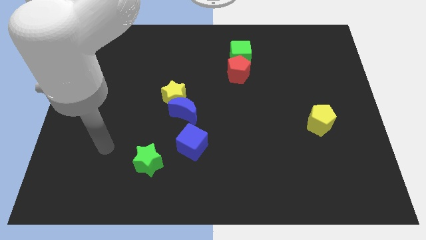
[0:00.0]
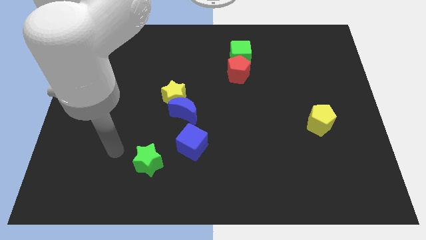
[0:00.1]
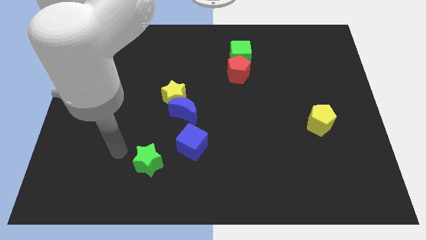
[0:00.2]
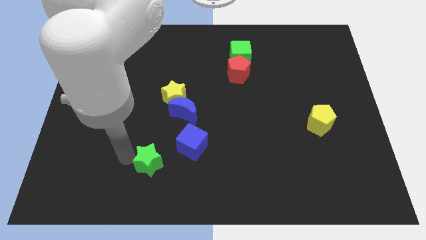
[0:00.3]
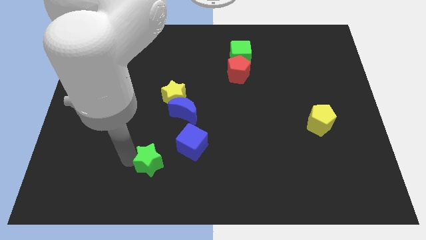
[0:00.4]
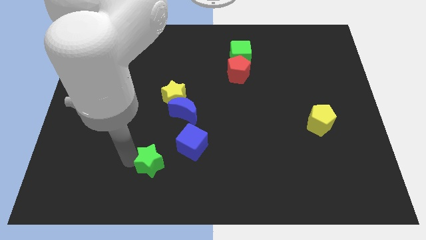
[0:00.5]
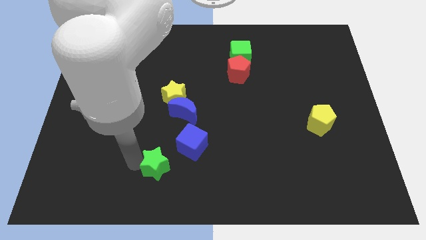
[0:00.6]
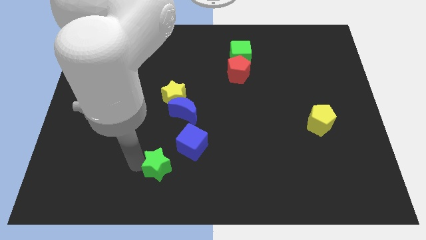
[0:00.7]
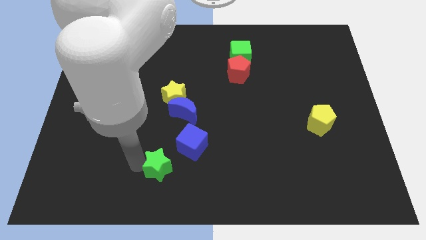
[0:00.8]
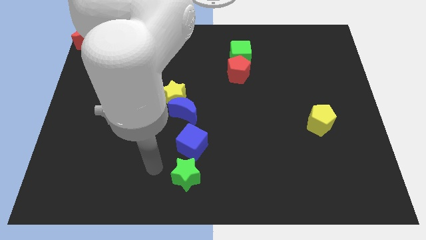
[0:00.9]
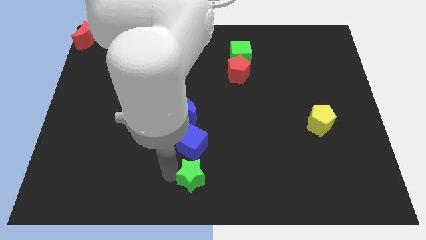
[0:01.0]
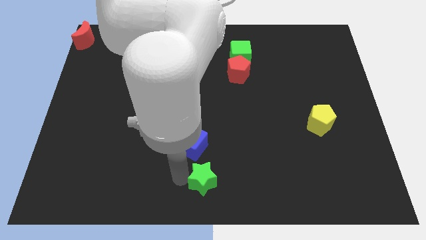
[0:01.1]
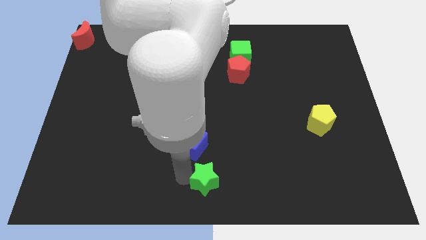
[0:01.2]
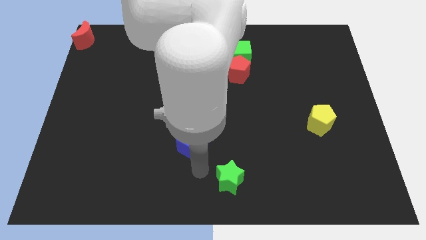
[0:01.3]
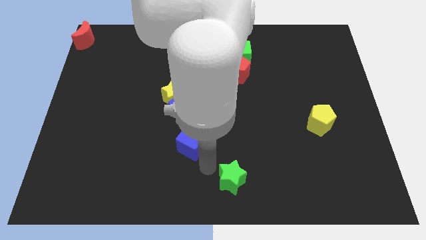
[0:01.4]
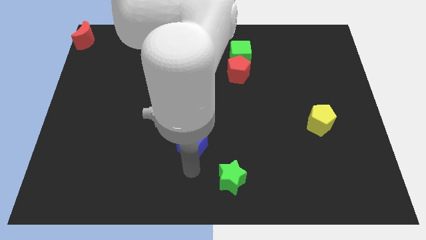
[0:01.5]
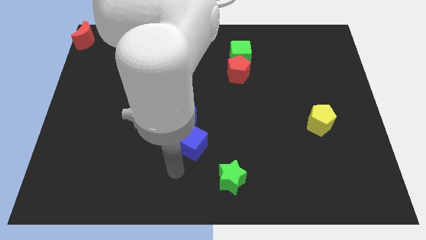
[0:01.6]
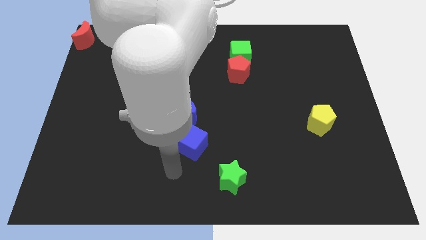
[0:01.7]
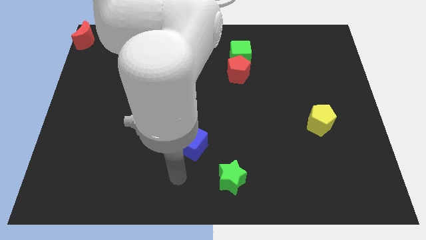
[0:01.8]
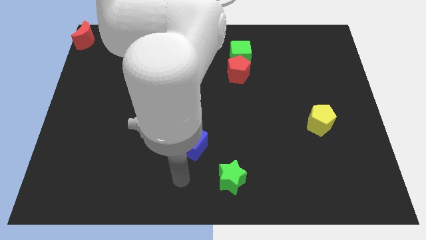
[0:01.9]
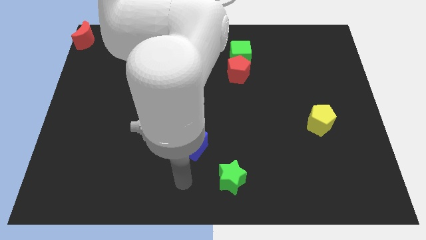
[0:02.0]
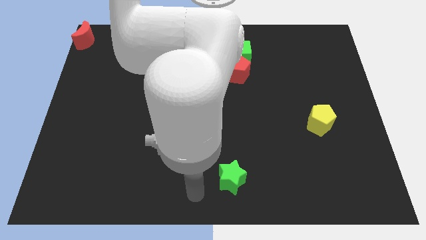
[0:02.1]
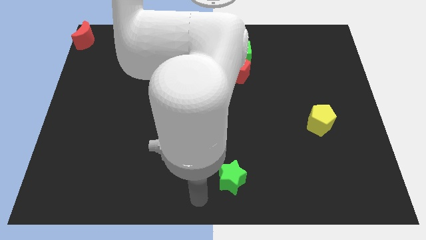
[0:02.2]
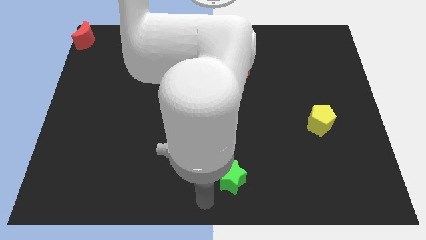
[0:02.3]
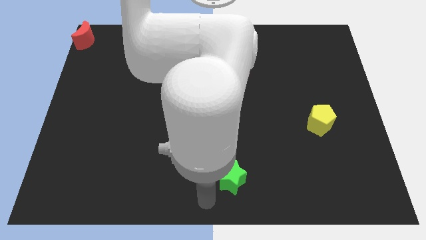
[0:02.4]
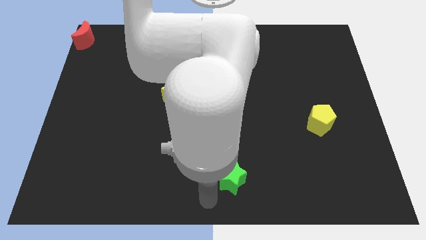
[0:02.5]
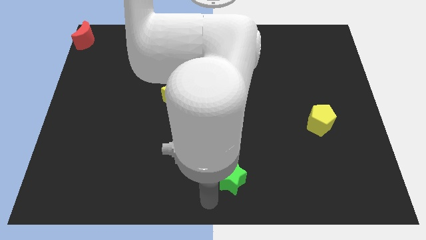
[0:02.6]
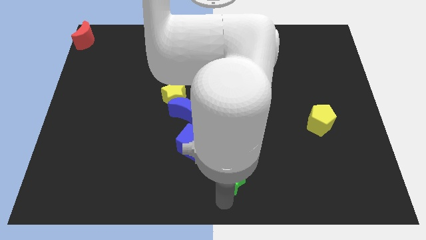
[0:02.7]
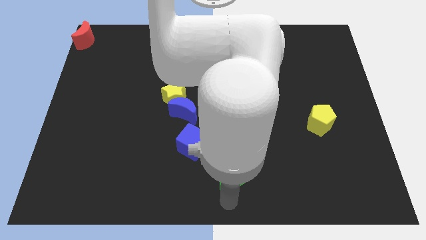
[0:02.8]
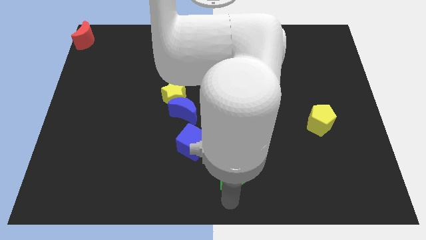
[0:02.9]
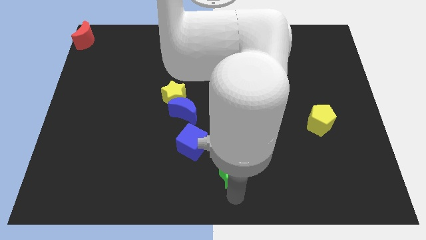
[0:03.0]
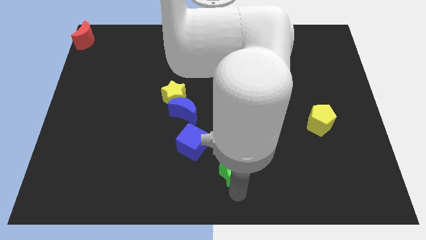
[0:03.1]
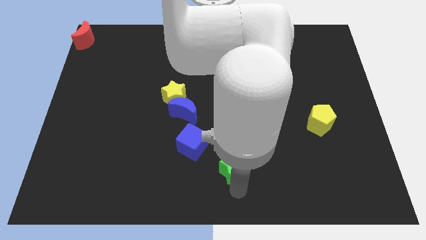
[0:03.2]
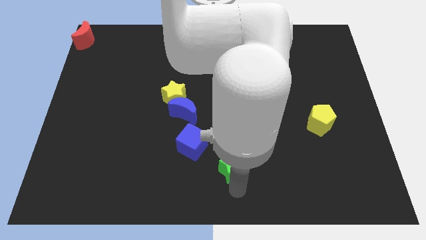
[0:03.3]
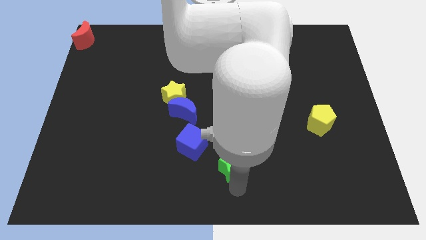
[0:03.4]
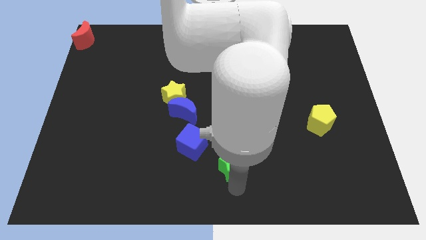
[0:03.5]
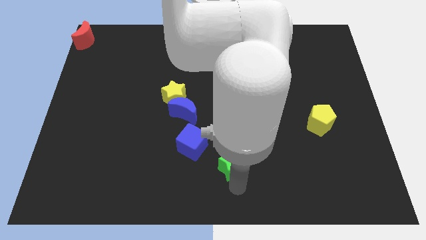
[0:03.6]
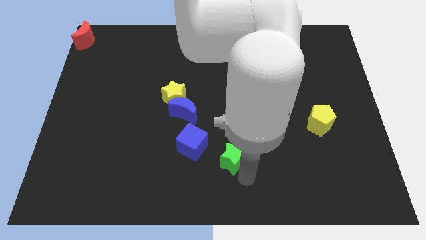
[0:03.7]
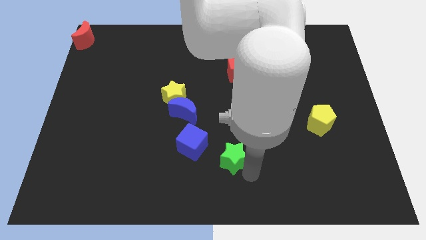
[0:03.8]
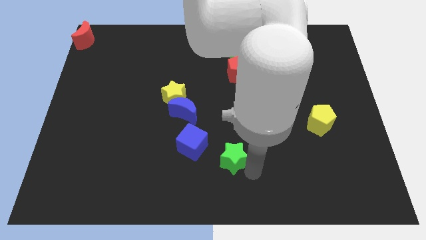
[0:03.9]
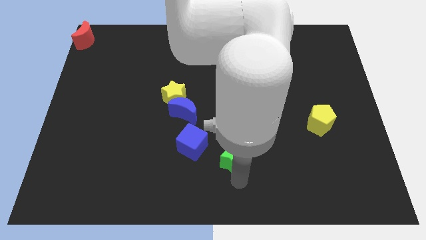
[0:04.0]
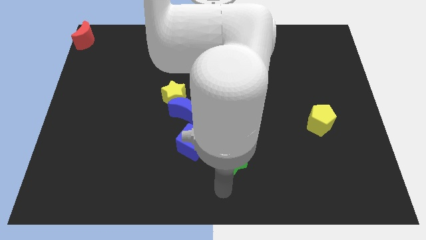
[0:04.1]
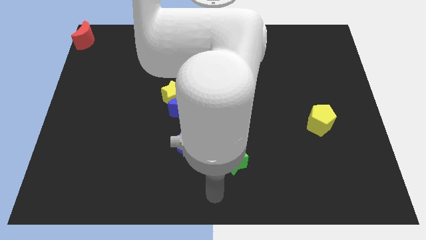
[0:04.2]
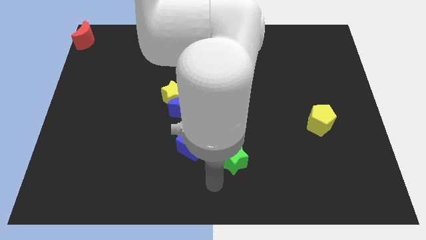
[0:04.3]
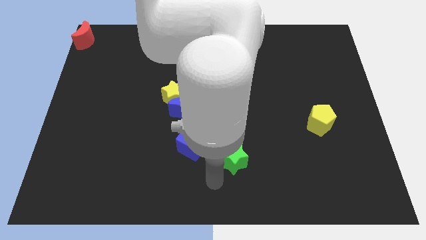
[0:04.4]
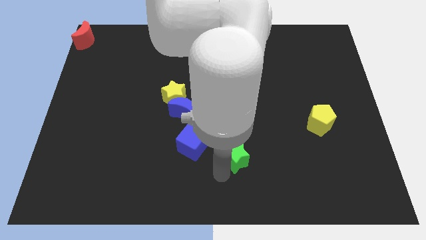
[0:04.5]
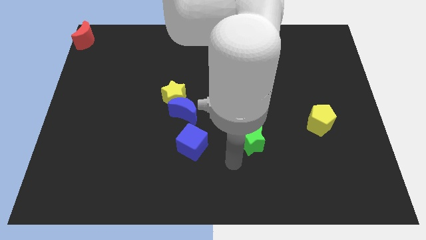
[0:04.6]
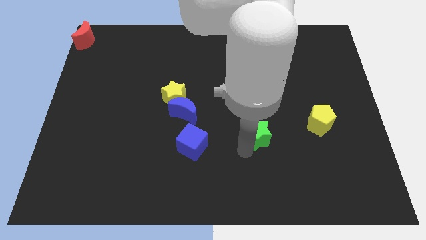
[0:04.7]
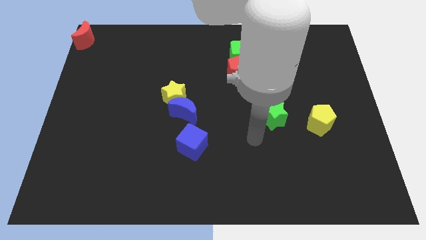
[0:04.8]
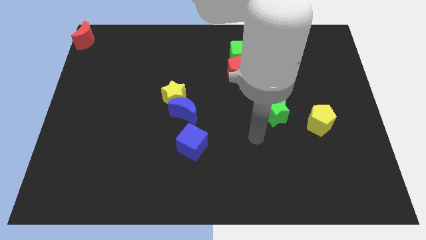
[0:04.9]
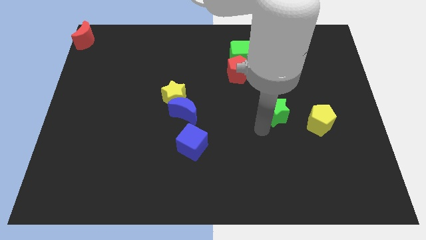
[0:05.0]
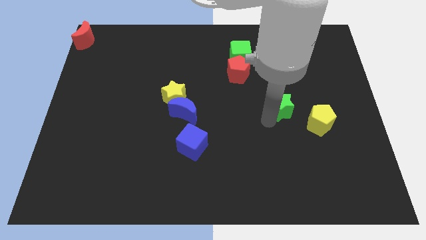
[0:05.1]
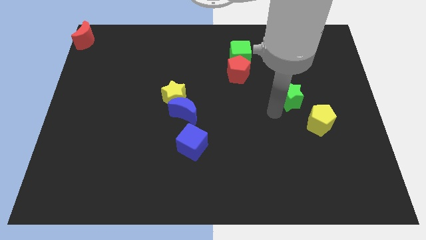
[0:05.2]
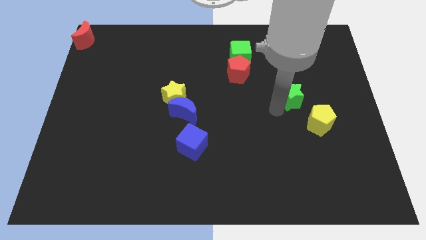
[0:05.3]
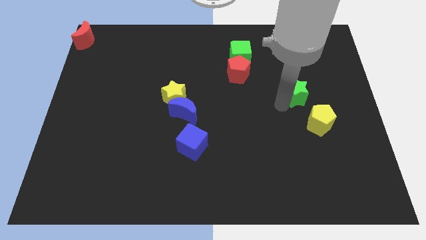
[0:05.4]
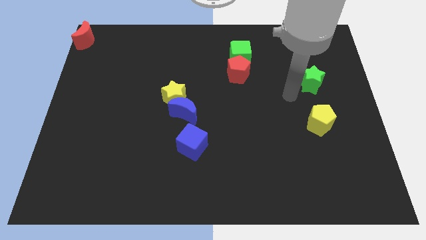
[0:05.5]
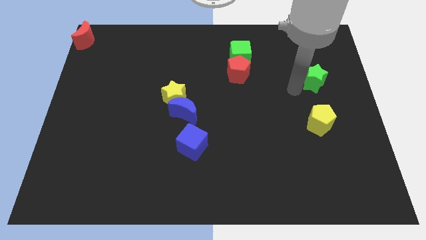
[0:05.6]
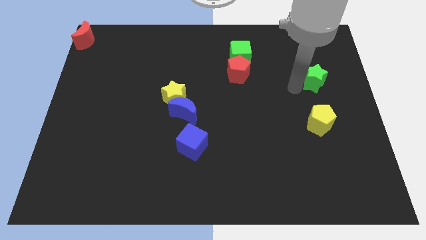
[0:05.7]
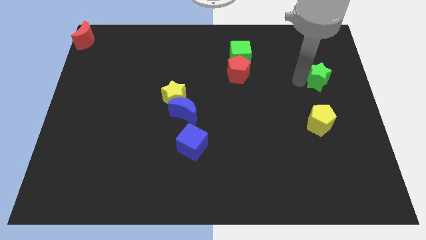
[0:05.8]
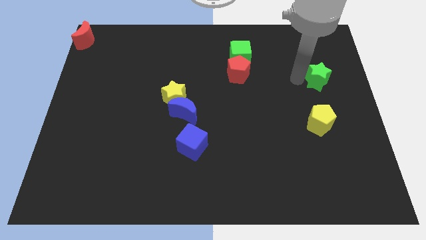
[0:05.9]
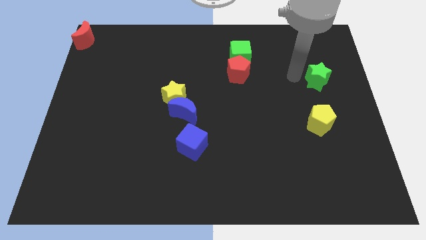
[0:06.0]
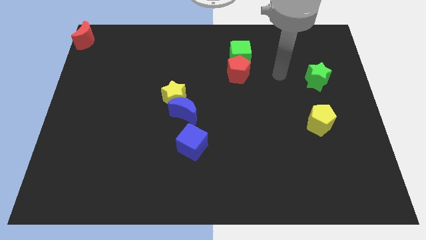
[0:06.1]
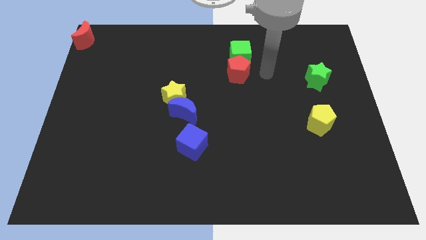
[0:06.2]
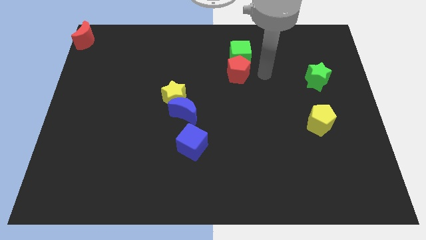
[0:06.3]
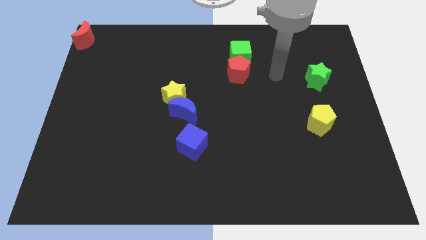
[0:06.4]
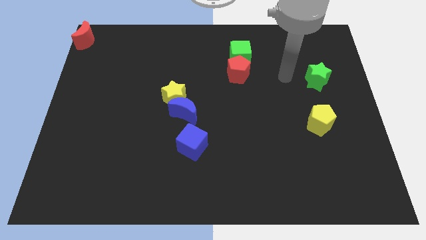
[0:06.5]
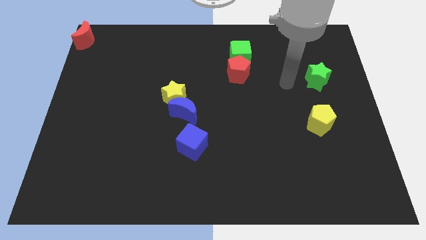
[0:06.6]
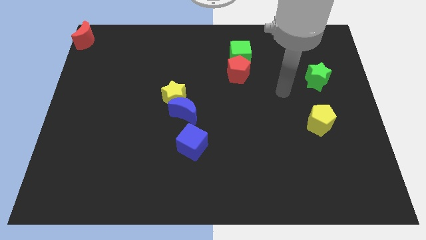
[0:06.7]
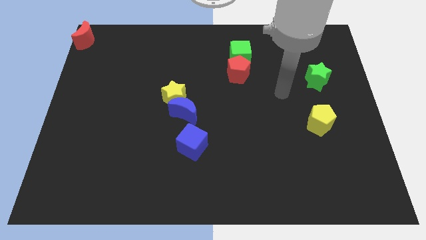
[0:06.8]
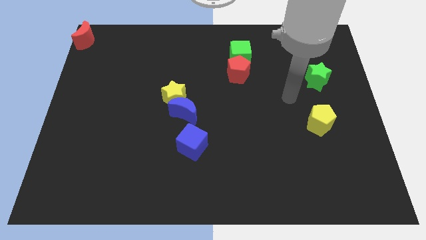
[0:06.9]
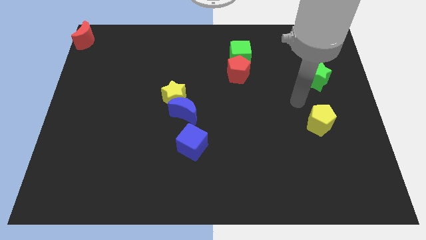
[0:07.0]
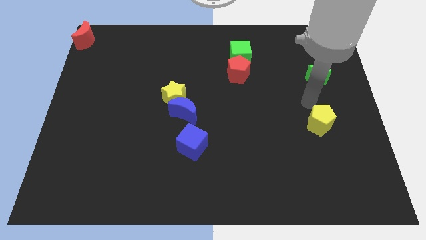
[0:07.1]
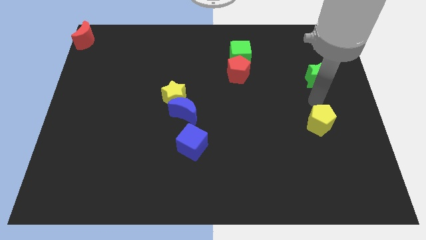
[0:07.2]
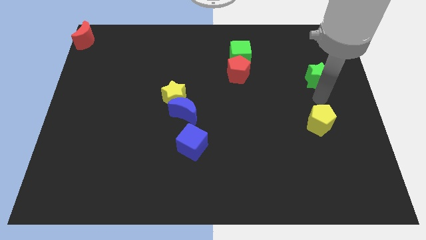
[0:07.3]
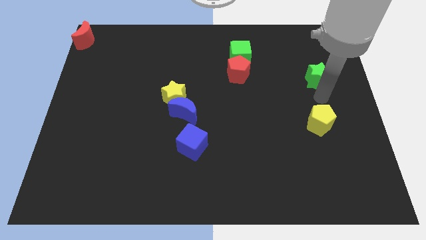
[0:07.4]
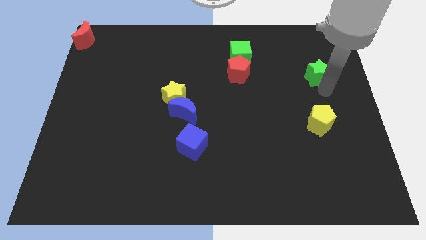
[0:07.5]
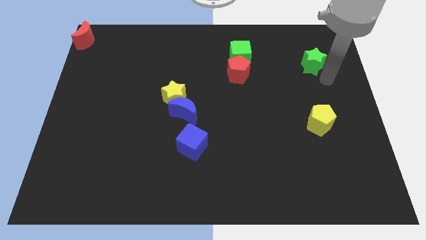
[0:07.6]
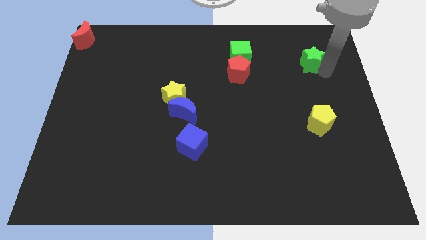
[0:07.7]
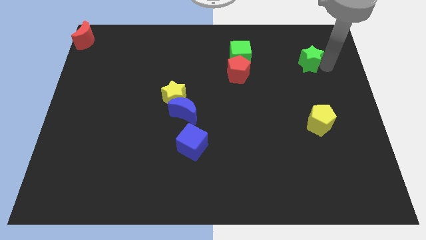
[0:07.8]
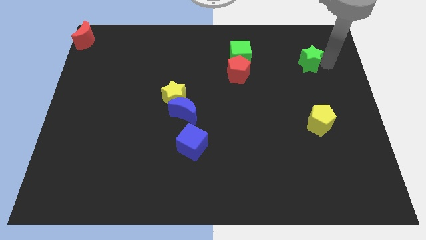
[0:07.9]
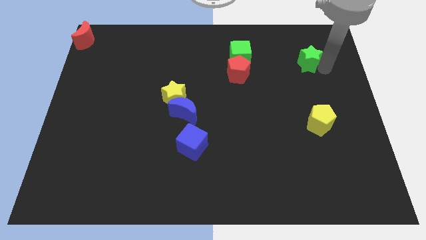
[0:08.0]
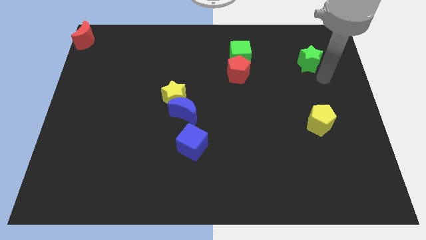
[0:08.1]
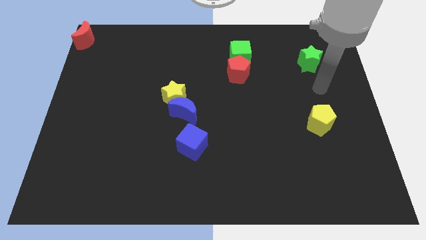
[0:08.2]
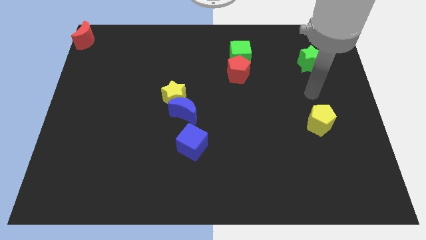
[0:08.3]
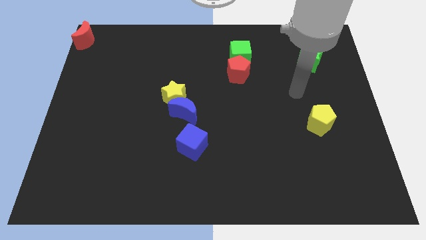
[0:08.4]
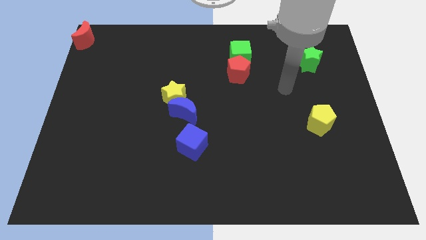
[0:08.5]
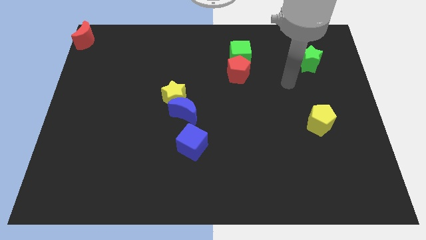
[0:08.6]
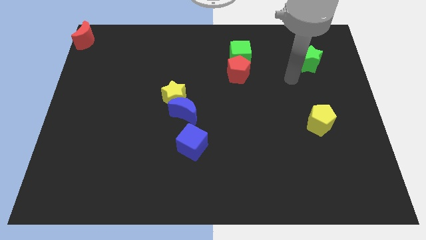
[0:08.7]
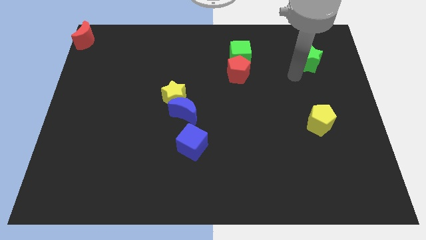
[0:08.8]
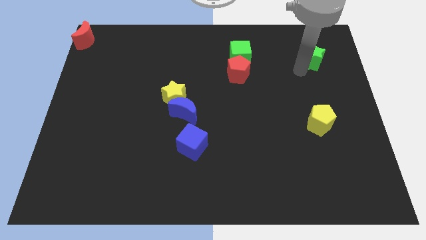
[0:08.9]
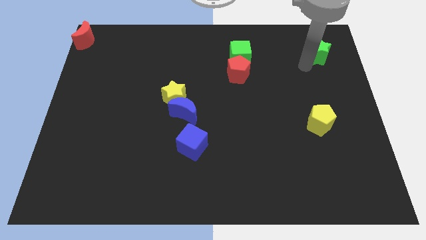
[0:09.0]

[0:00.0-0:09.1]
move the green star towards the top right corner
